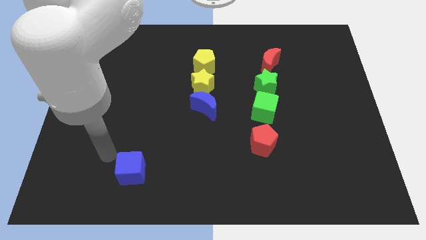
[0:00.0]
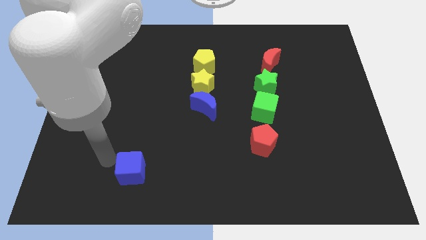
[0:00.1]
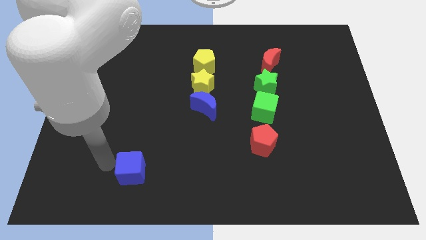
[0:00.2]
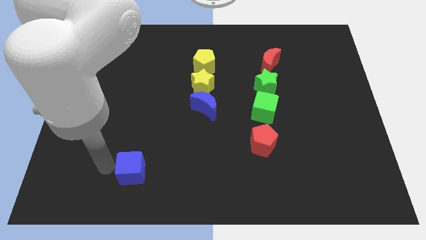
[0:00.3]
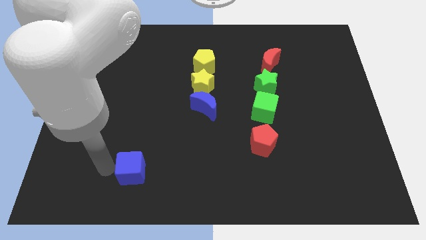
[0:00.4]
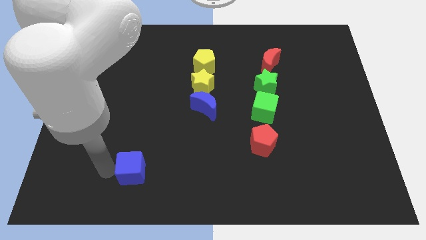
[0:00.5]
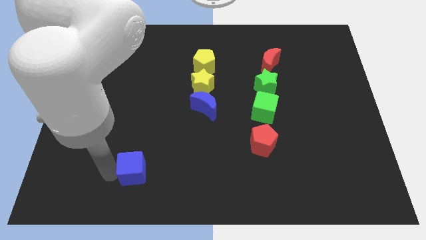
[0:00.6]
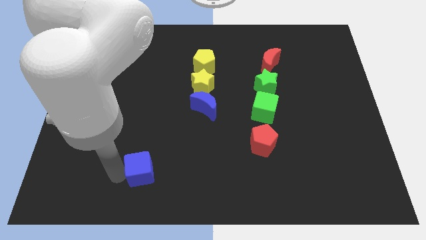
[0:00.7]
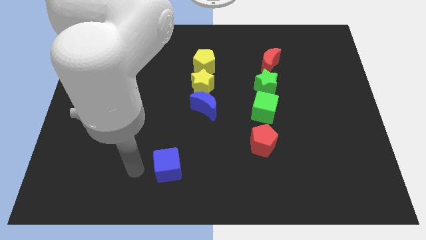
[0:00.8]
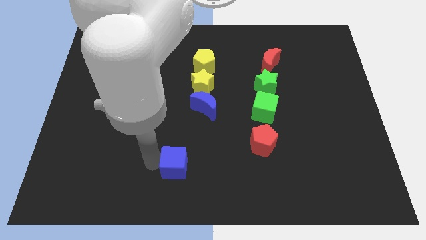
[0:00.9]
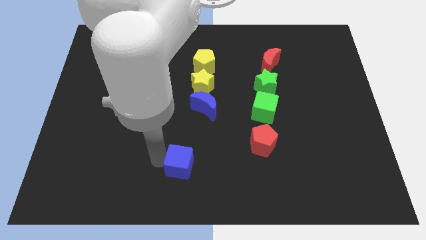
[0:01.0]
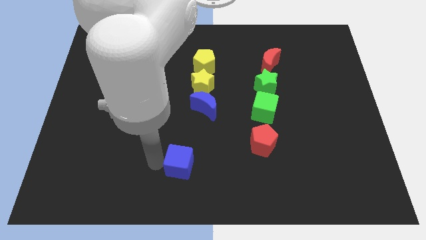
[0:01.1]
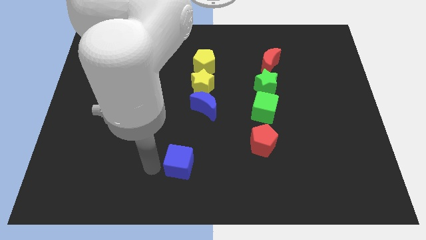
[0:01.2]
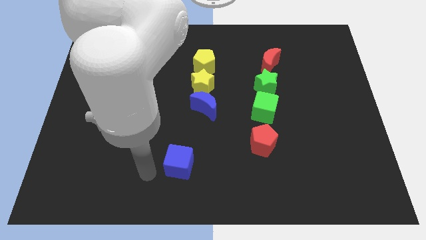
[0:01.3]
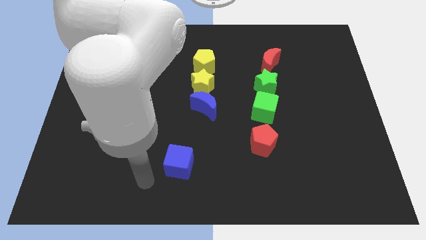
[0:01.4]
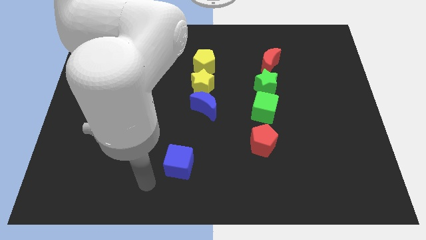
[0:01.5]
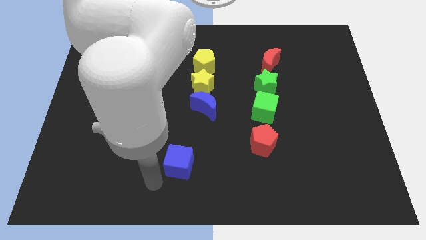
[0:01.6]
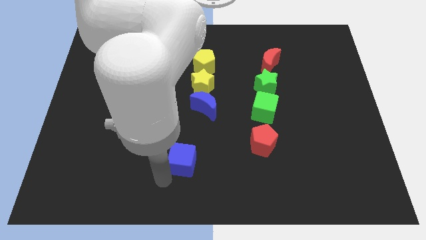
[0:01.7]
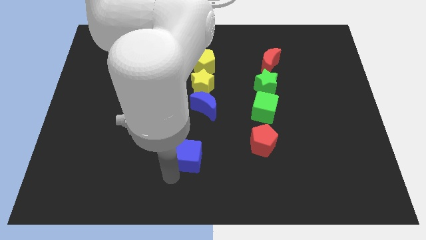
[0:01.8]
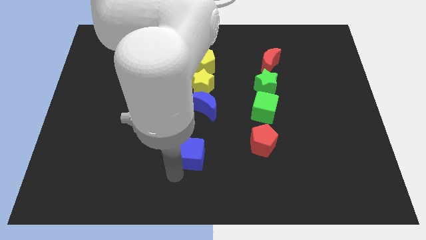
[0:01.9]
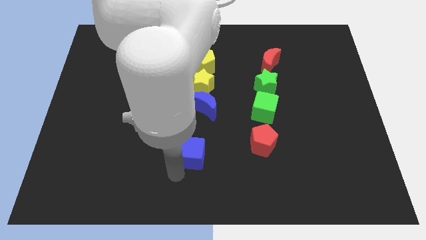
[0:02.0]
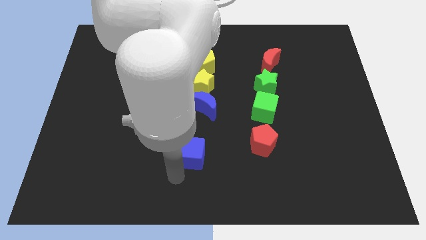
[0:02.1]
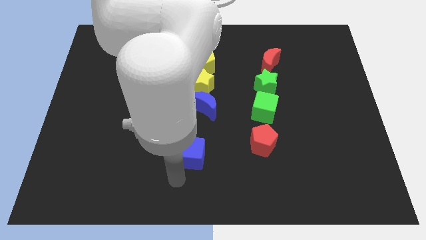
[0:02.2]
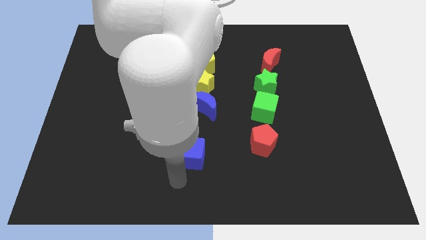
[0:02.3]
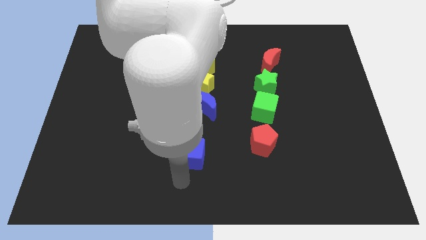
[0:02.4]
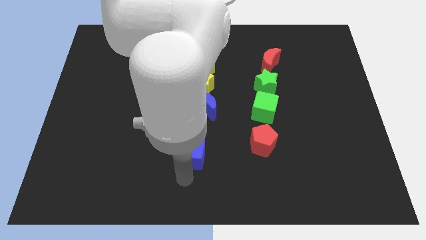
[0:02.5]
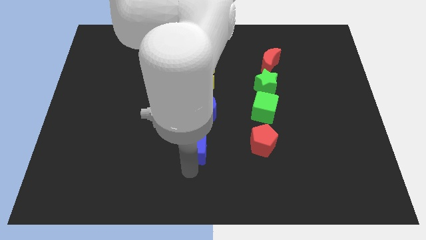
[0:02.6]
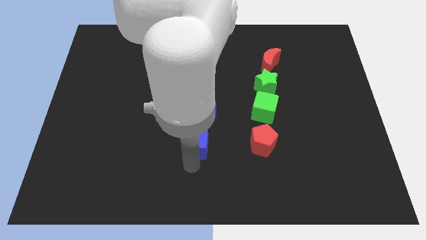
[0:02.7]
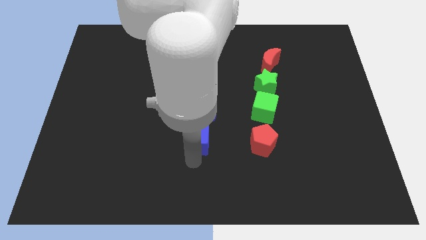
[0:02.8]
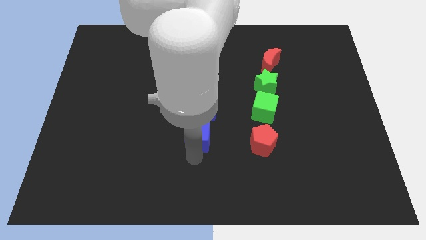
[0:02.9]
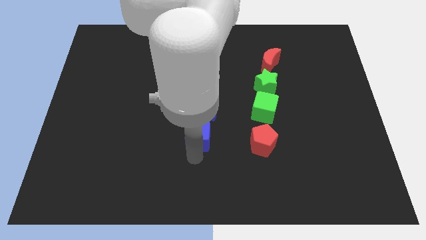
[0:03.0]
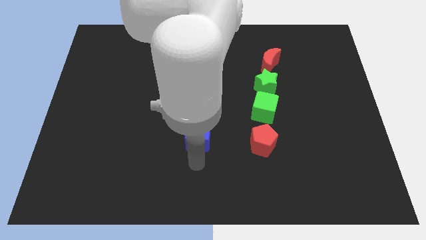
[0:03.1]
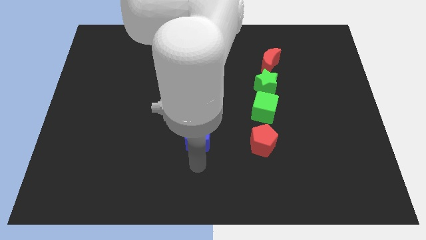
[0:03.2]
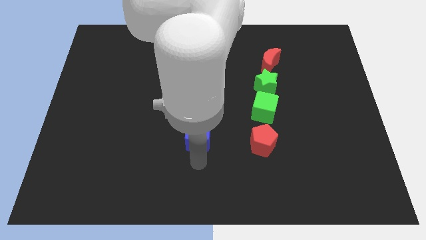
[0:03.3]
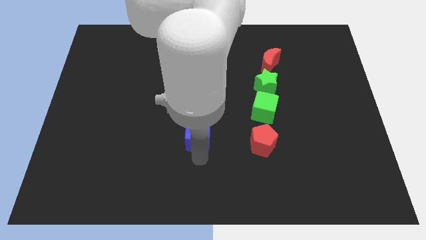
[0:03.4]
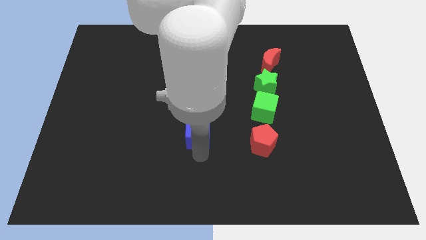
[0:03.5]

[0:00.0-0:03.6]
move the blue cube below the blue moon

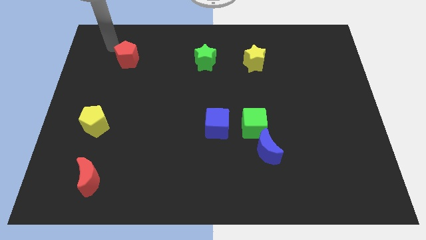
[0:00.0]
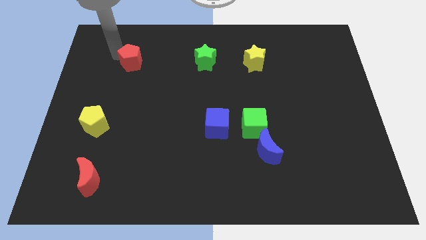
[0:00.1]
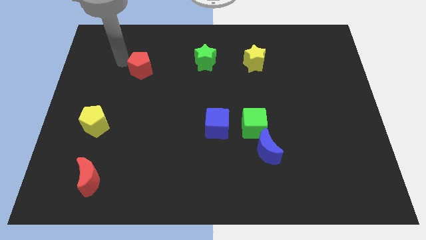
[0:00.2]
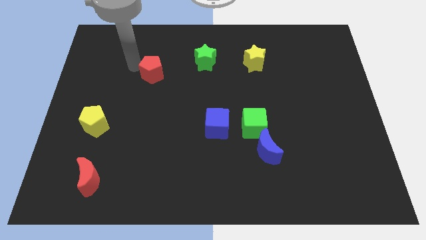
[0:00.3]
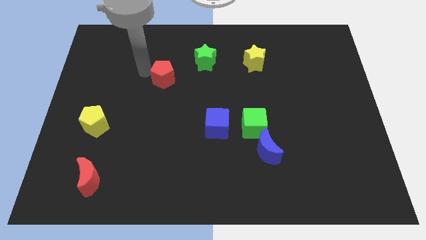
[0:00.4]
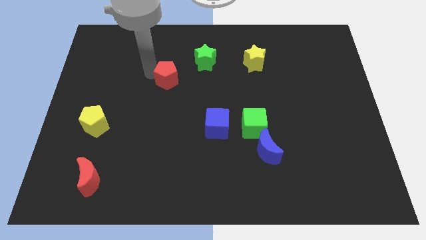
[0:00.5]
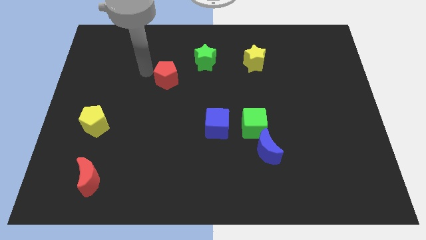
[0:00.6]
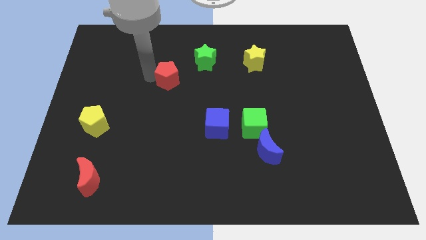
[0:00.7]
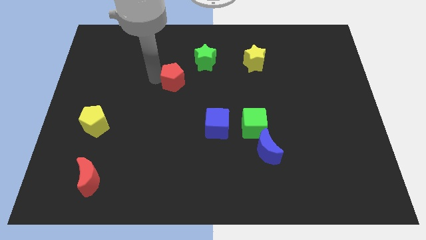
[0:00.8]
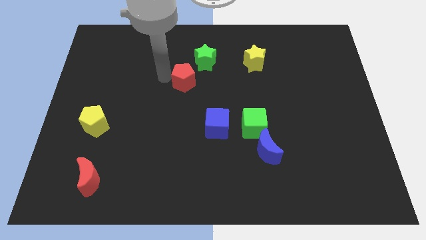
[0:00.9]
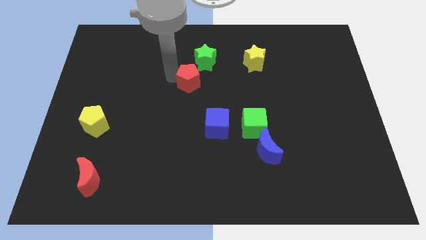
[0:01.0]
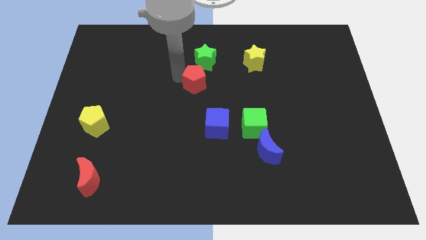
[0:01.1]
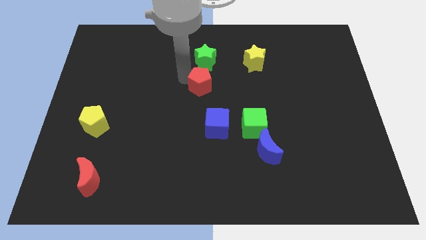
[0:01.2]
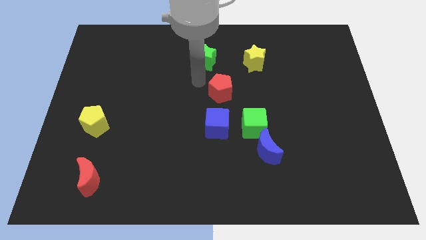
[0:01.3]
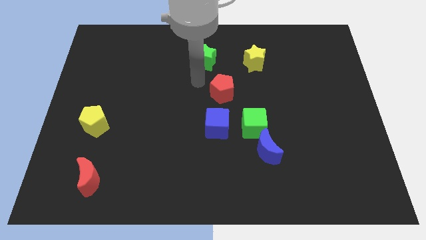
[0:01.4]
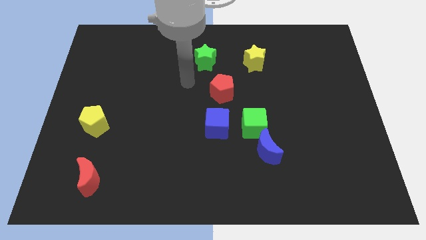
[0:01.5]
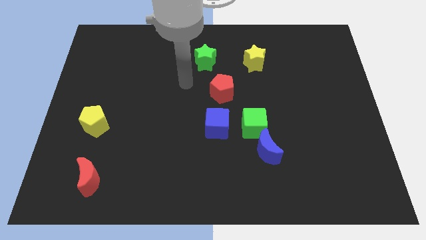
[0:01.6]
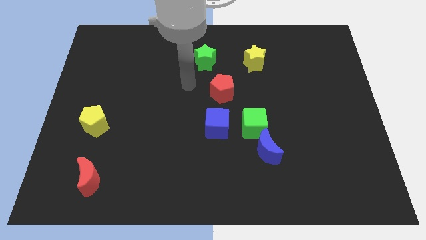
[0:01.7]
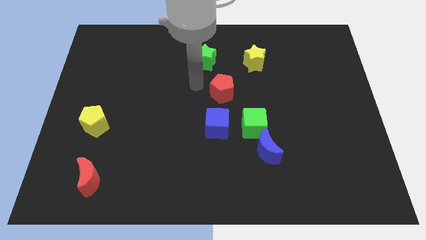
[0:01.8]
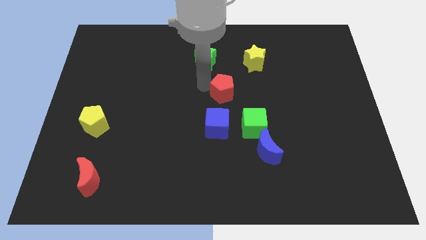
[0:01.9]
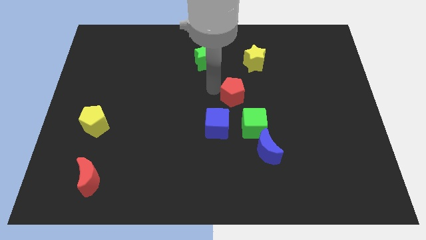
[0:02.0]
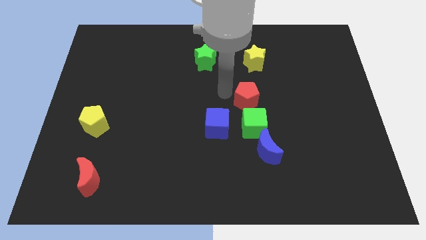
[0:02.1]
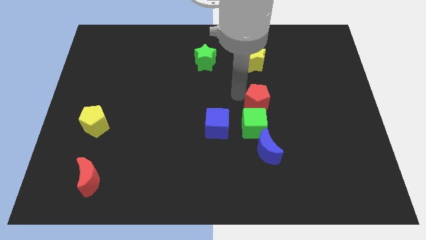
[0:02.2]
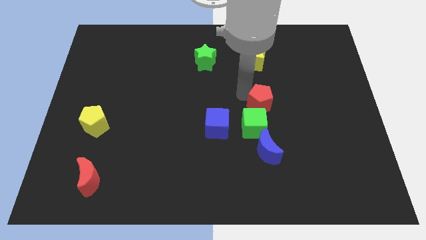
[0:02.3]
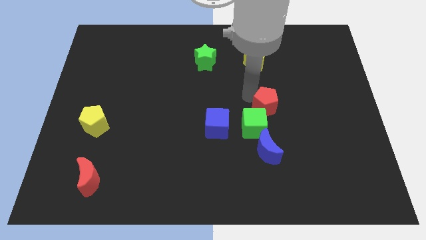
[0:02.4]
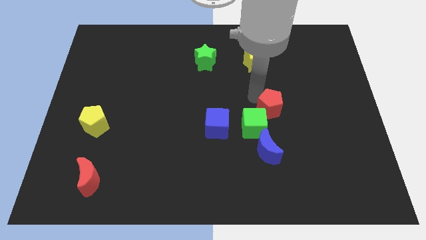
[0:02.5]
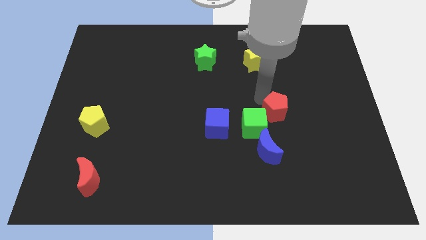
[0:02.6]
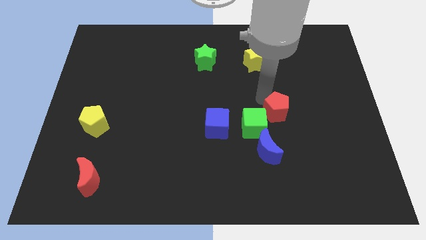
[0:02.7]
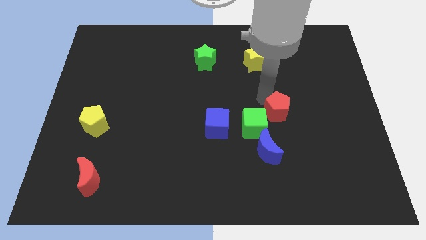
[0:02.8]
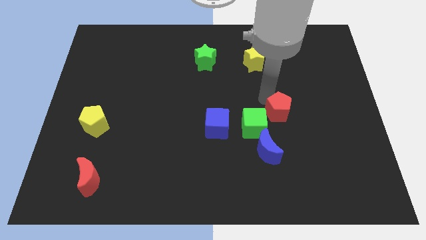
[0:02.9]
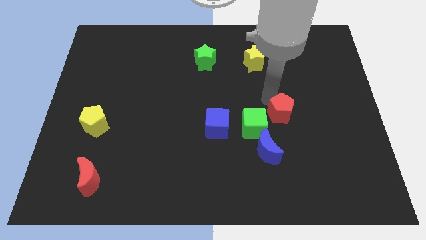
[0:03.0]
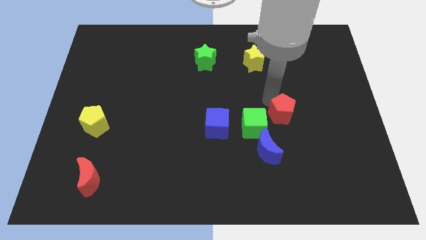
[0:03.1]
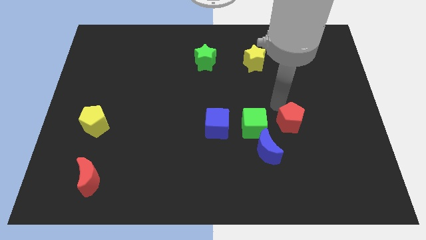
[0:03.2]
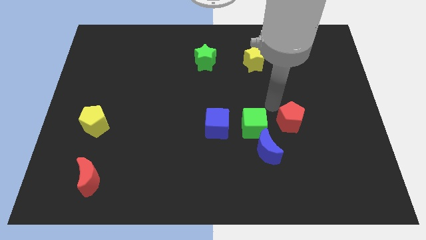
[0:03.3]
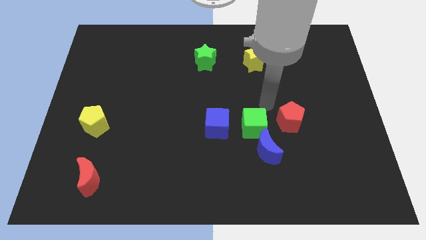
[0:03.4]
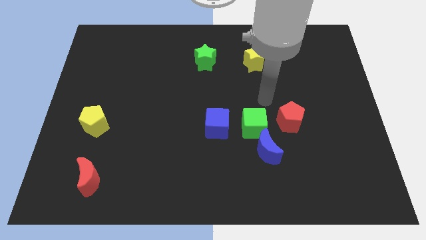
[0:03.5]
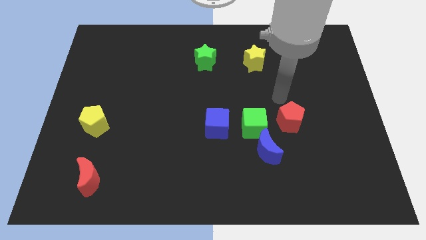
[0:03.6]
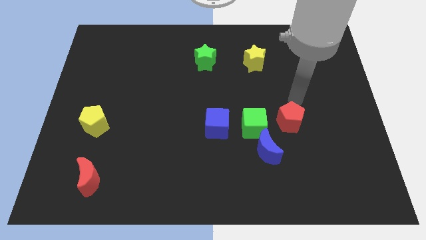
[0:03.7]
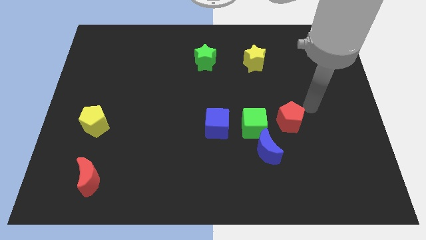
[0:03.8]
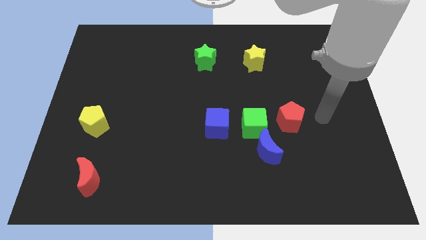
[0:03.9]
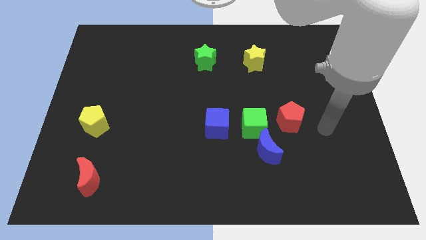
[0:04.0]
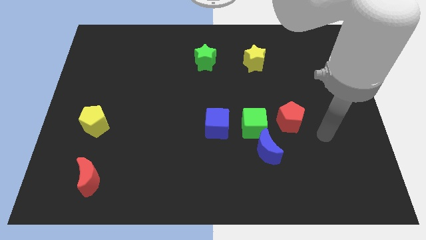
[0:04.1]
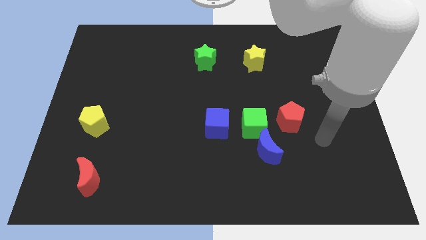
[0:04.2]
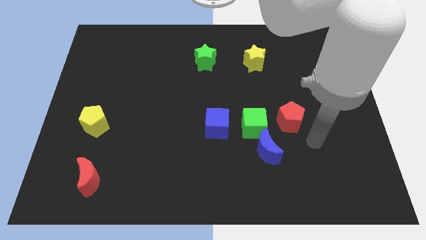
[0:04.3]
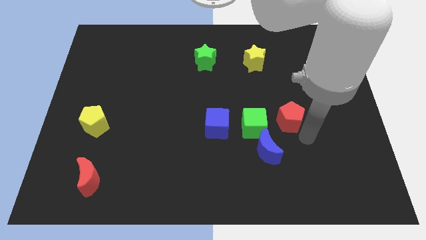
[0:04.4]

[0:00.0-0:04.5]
place the red pentagon to the right of the green cube

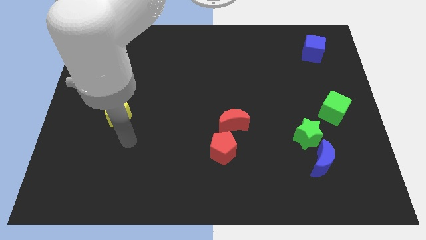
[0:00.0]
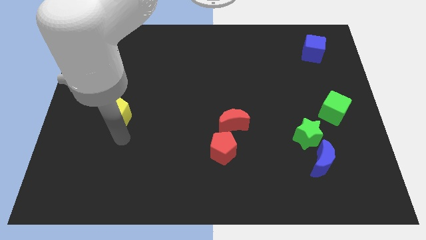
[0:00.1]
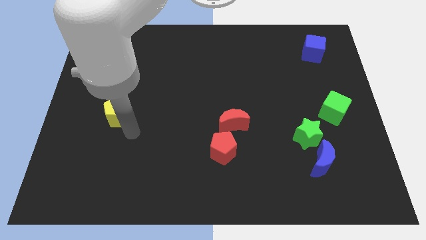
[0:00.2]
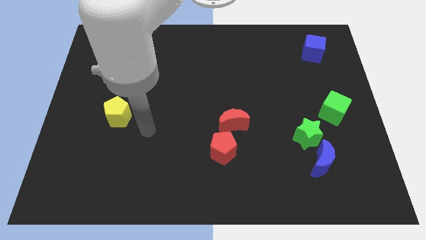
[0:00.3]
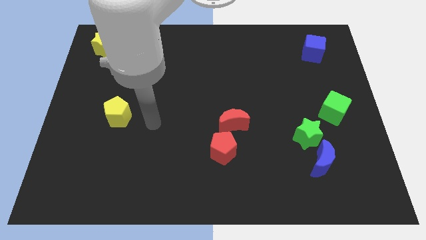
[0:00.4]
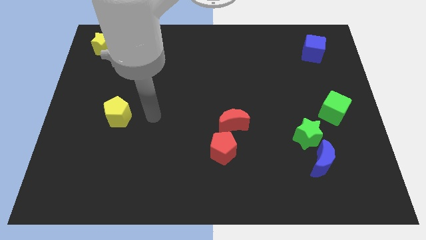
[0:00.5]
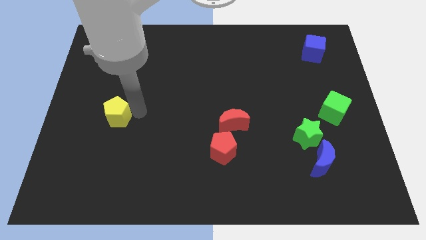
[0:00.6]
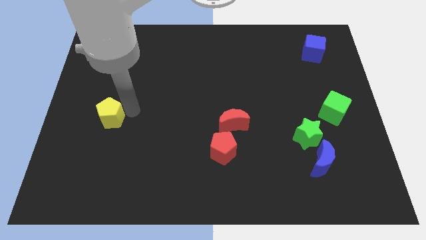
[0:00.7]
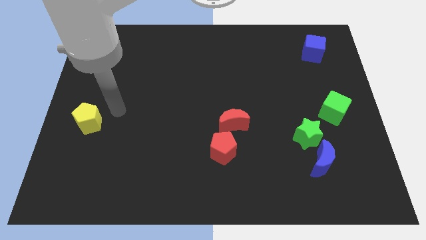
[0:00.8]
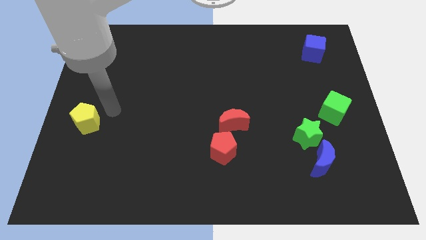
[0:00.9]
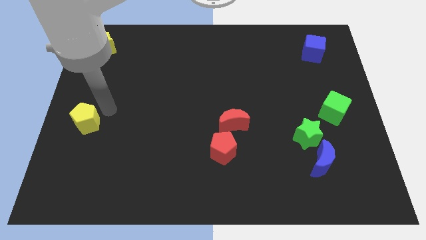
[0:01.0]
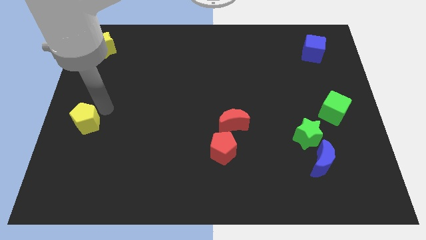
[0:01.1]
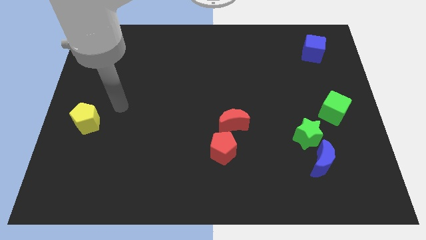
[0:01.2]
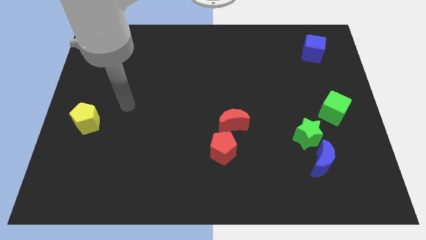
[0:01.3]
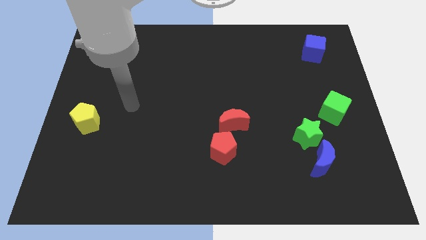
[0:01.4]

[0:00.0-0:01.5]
move the yellow pentagon vertically below the yellow pentagon
